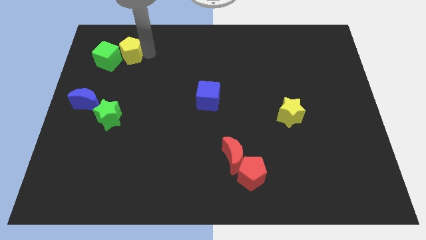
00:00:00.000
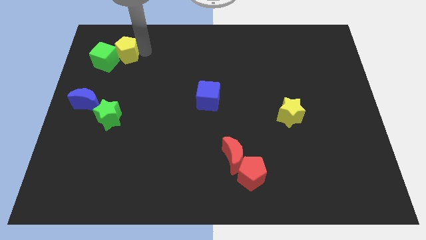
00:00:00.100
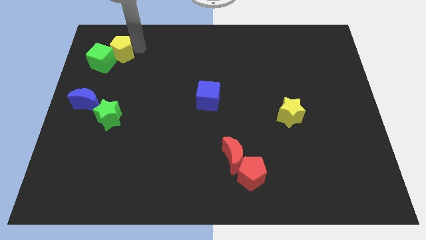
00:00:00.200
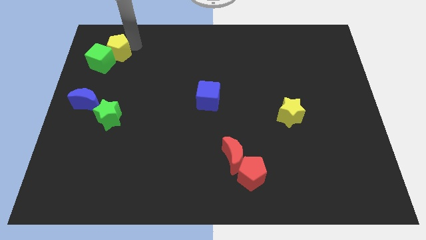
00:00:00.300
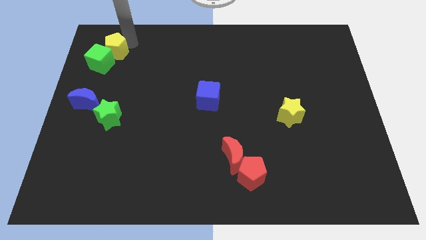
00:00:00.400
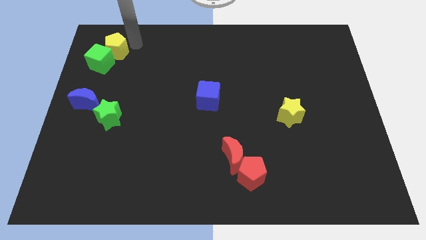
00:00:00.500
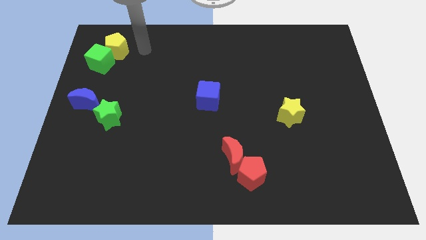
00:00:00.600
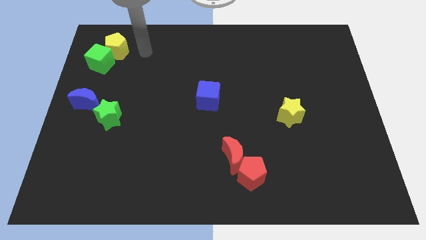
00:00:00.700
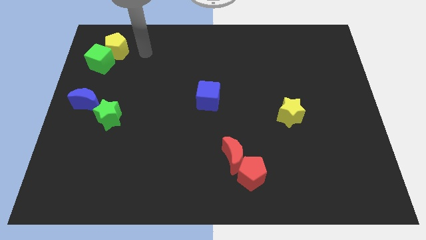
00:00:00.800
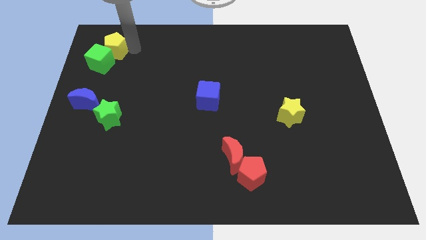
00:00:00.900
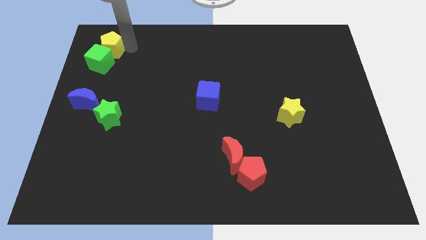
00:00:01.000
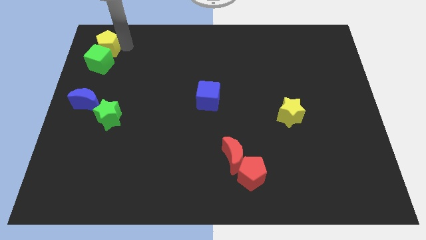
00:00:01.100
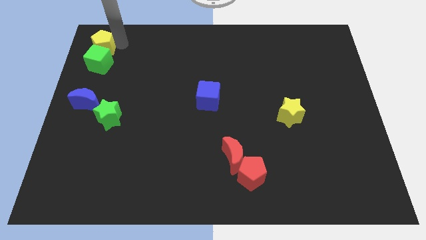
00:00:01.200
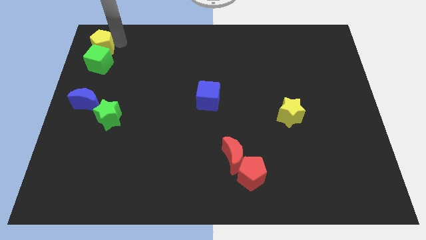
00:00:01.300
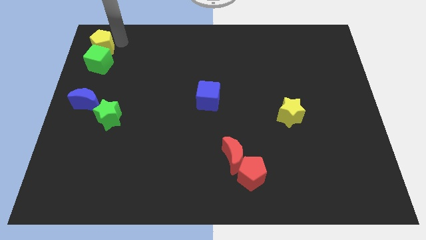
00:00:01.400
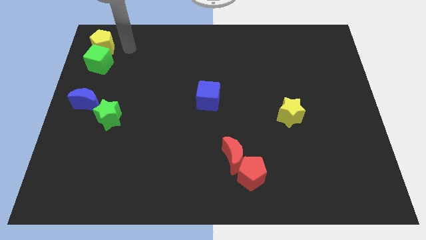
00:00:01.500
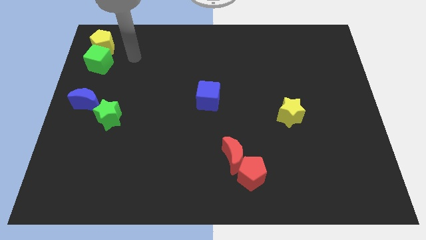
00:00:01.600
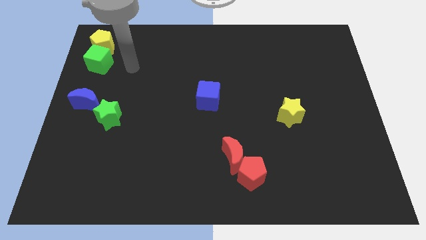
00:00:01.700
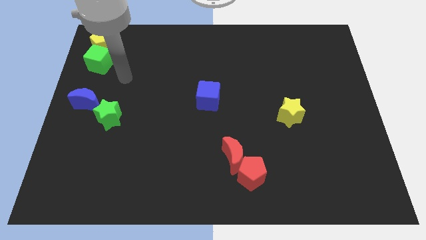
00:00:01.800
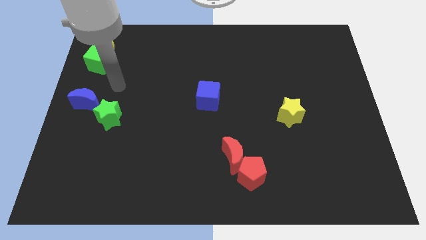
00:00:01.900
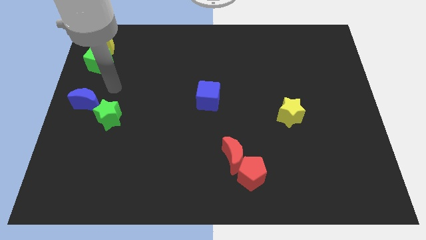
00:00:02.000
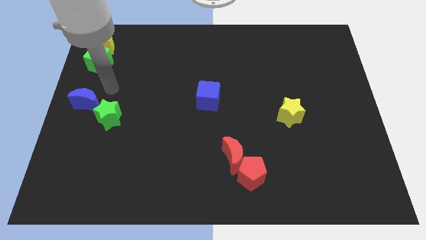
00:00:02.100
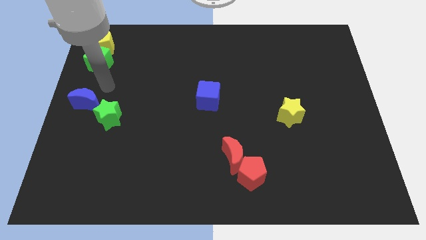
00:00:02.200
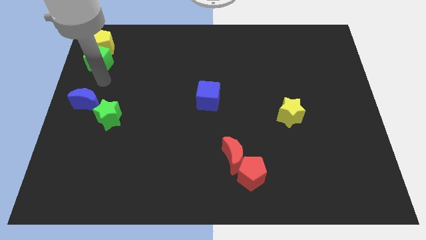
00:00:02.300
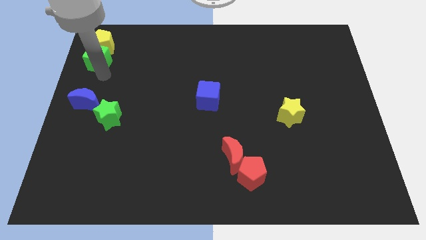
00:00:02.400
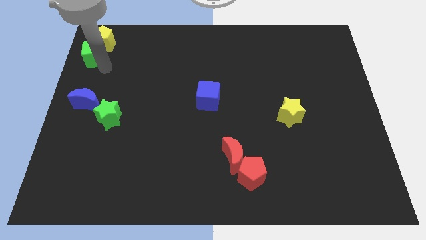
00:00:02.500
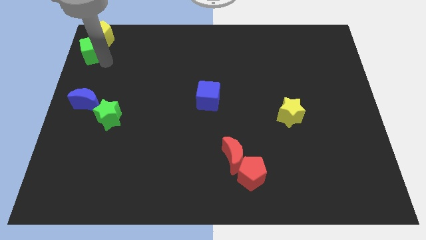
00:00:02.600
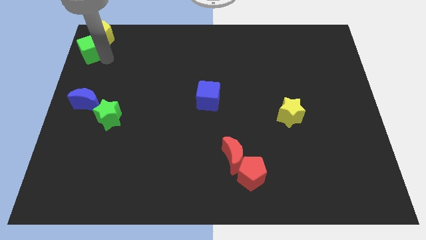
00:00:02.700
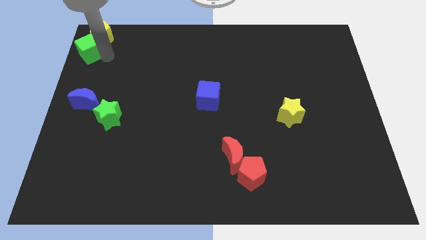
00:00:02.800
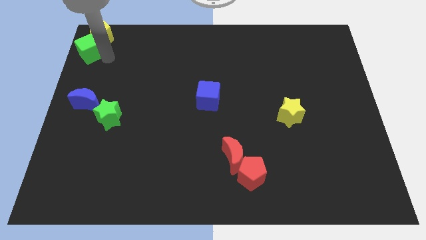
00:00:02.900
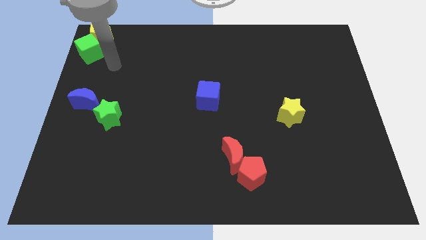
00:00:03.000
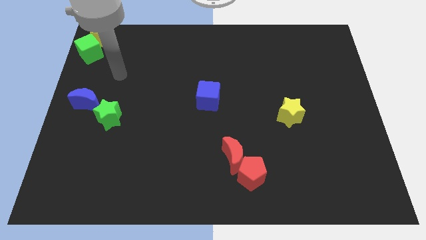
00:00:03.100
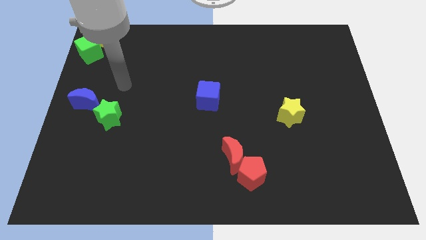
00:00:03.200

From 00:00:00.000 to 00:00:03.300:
place the green cube and yellow pentagon to the top left corner side

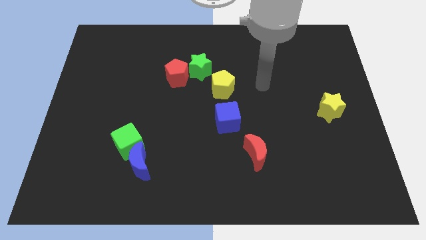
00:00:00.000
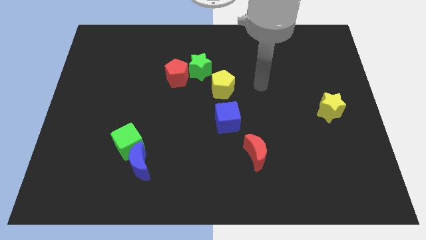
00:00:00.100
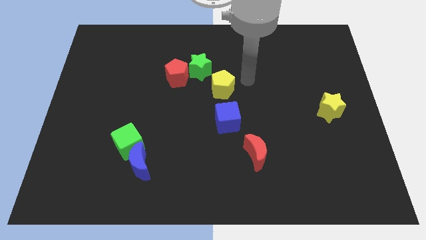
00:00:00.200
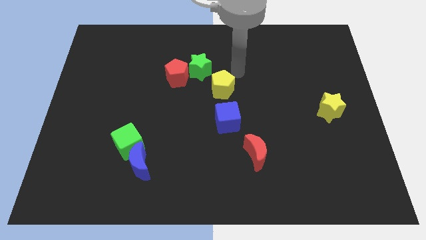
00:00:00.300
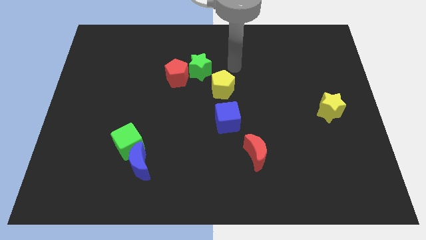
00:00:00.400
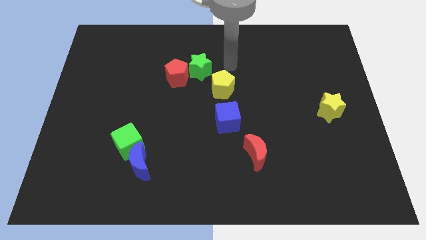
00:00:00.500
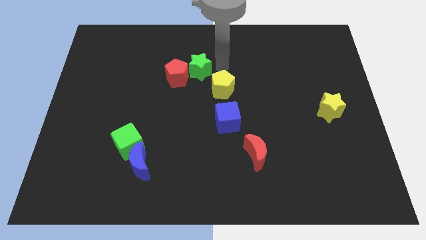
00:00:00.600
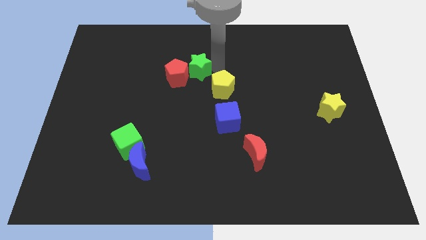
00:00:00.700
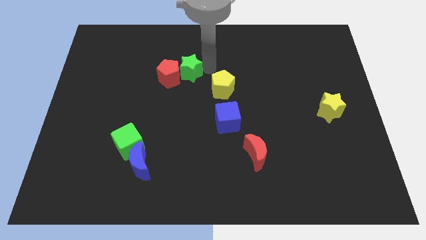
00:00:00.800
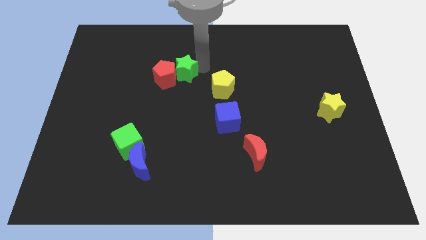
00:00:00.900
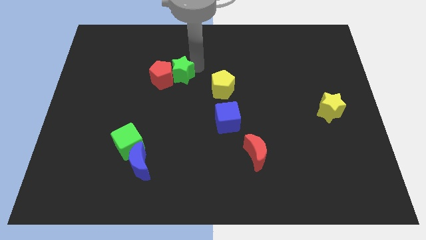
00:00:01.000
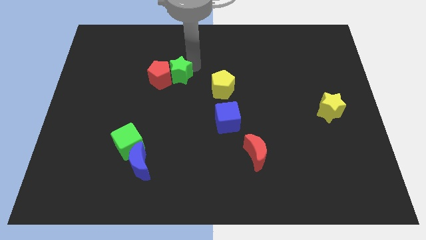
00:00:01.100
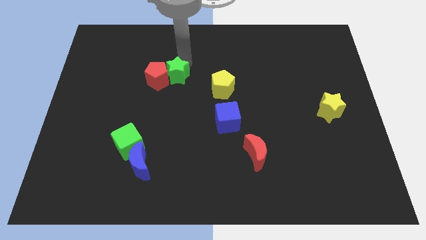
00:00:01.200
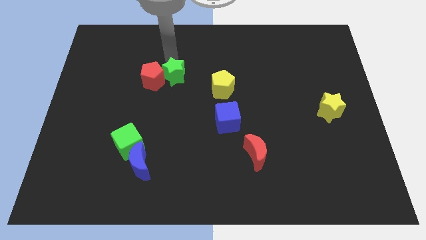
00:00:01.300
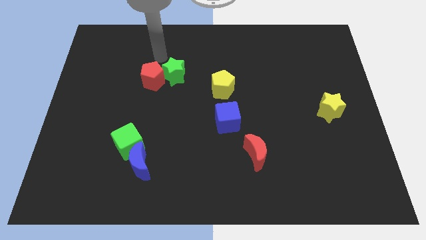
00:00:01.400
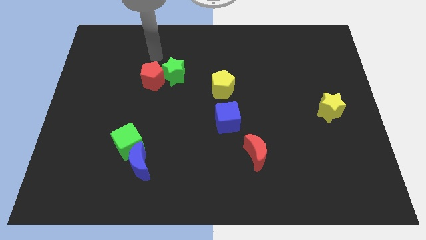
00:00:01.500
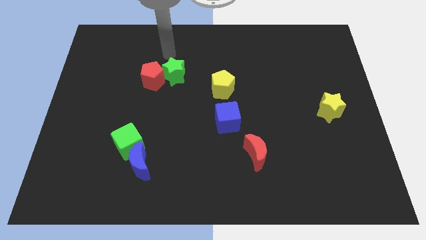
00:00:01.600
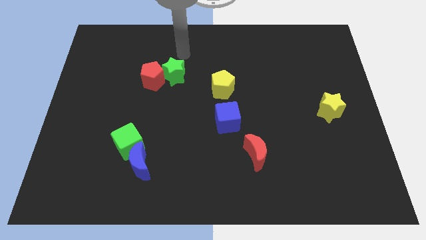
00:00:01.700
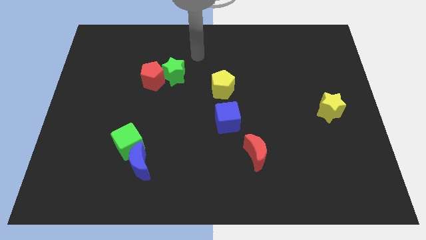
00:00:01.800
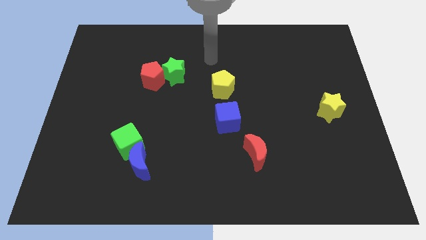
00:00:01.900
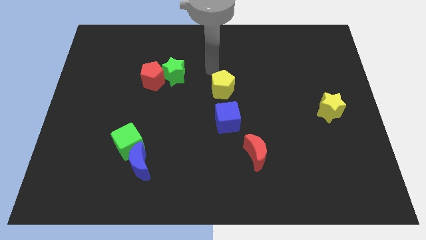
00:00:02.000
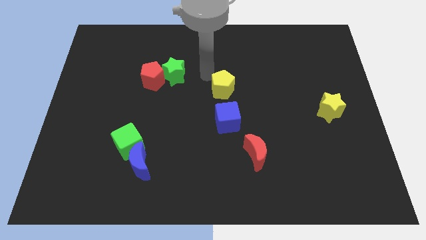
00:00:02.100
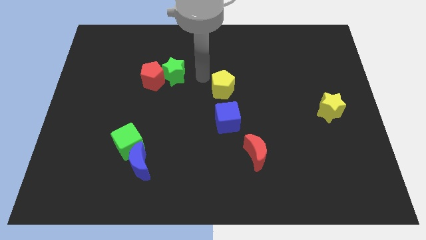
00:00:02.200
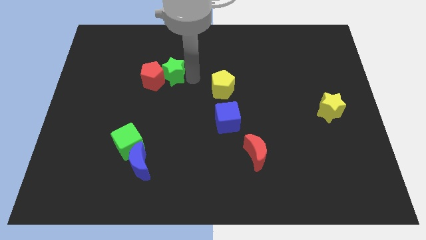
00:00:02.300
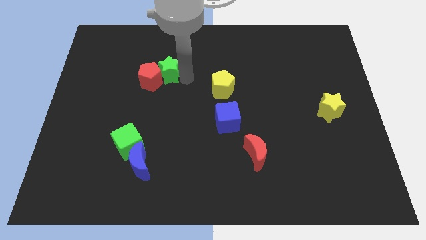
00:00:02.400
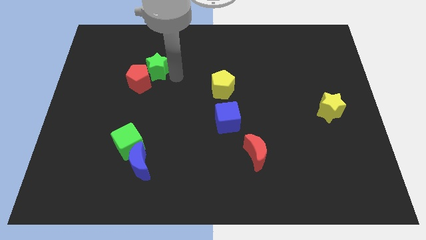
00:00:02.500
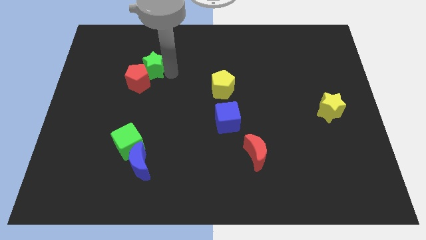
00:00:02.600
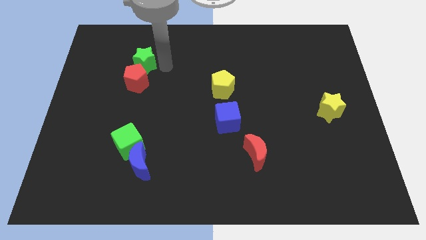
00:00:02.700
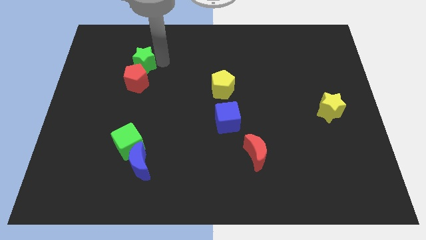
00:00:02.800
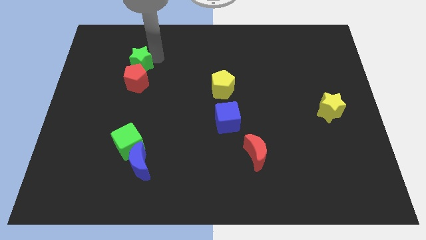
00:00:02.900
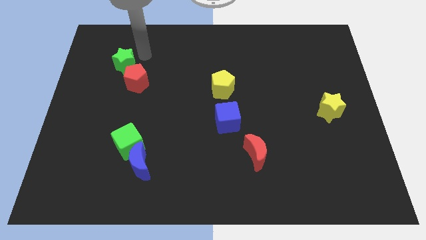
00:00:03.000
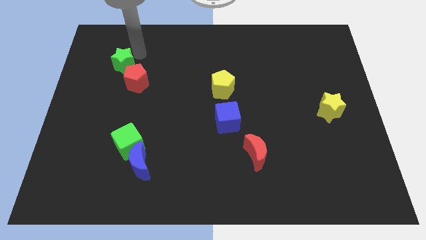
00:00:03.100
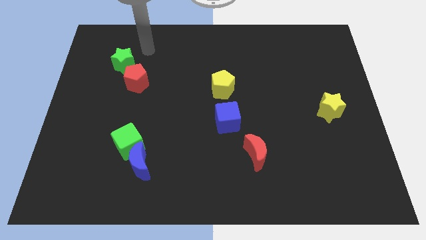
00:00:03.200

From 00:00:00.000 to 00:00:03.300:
separate green star and red pentagon from yellow pentagon

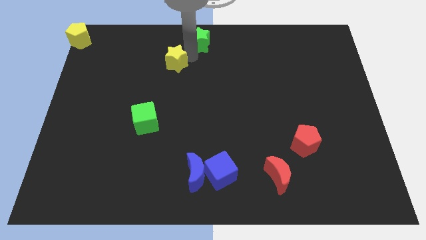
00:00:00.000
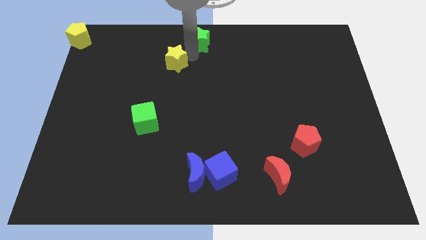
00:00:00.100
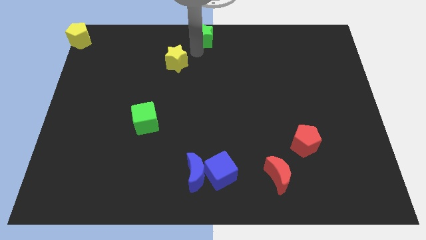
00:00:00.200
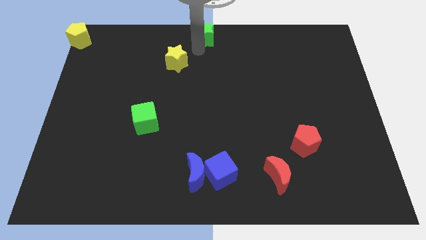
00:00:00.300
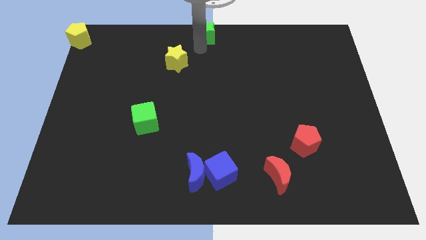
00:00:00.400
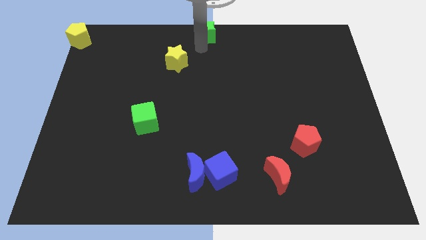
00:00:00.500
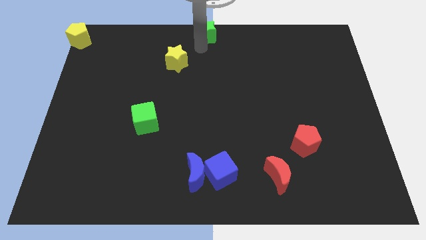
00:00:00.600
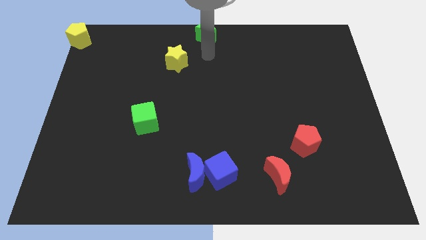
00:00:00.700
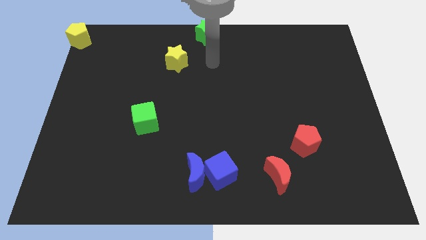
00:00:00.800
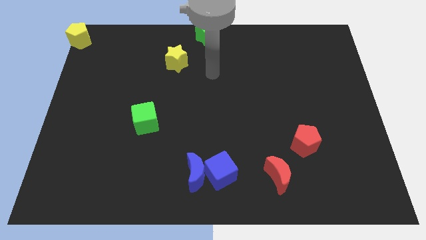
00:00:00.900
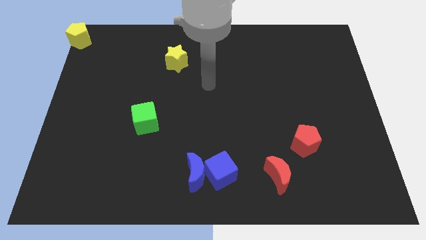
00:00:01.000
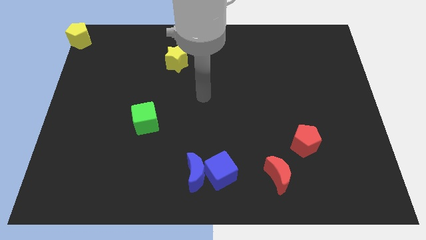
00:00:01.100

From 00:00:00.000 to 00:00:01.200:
push the green star to the top center of the board

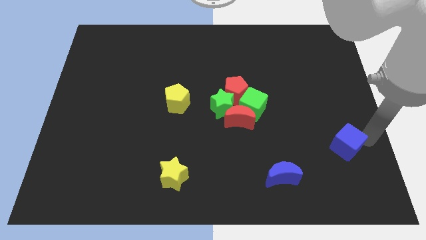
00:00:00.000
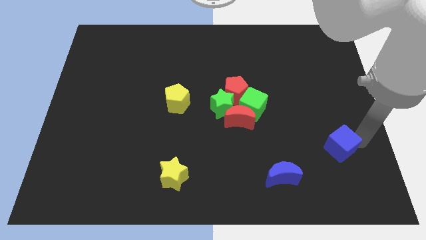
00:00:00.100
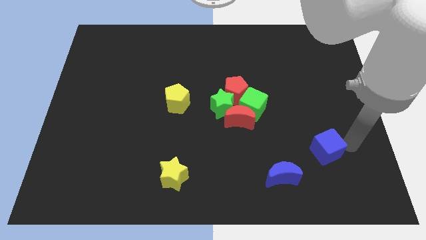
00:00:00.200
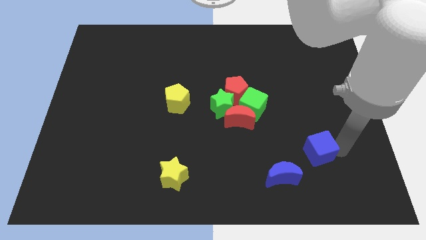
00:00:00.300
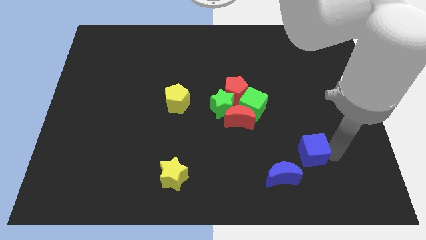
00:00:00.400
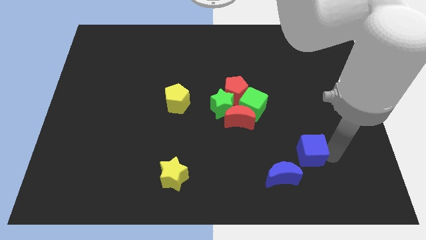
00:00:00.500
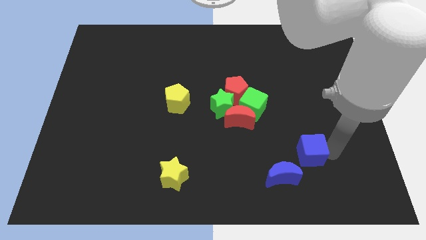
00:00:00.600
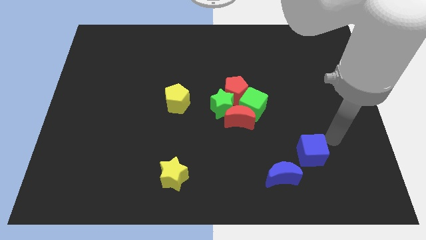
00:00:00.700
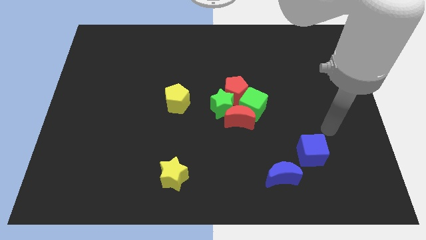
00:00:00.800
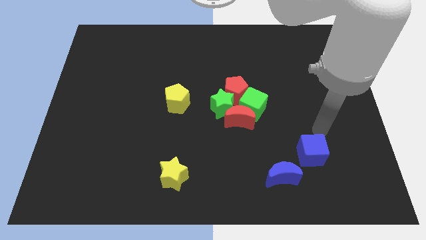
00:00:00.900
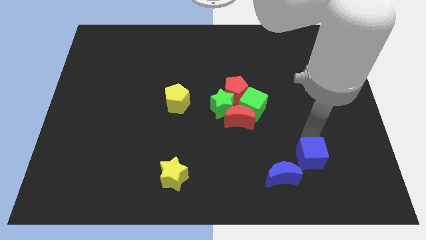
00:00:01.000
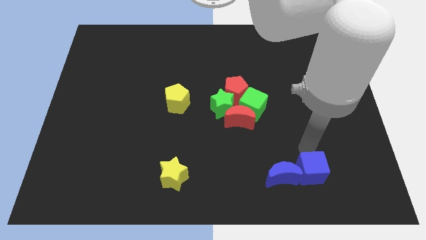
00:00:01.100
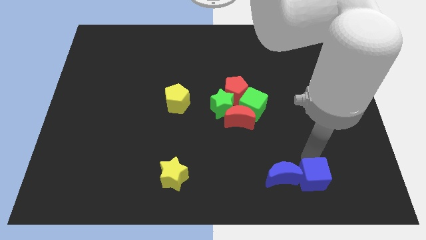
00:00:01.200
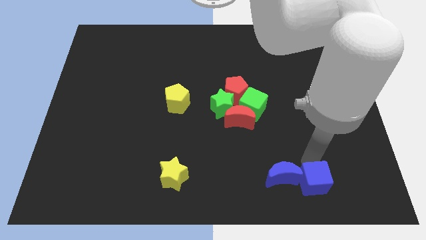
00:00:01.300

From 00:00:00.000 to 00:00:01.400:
place blue cube beside blue moon
